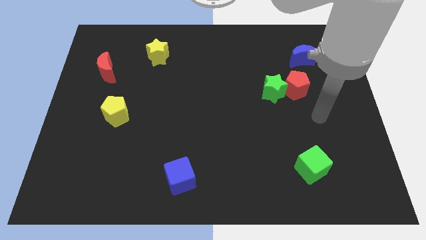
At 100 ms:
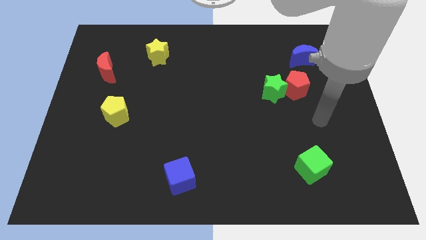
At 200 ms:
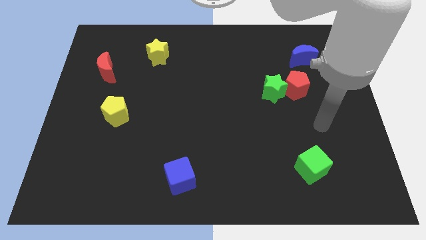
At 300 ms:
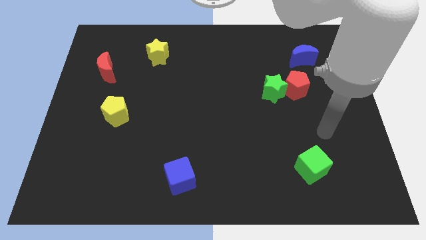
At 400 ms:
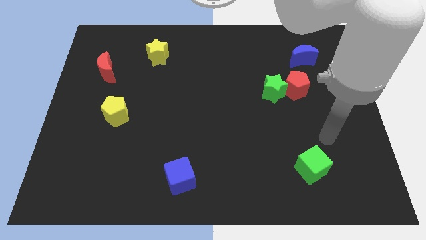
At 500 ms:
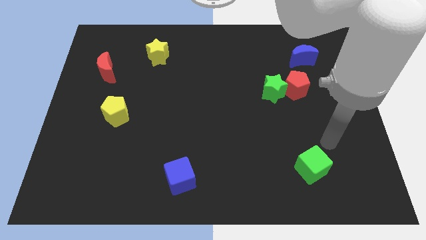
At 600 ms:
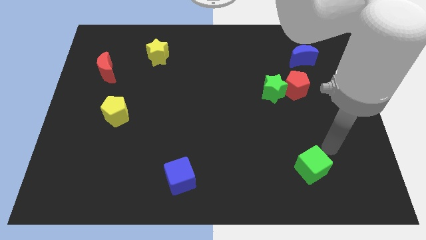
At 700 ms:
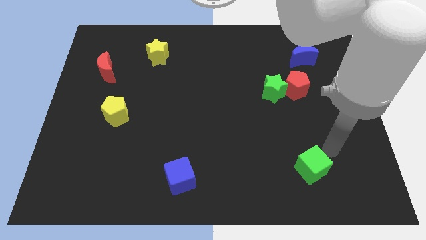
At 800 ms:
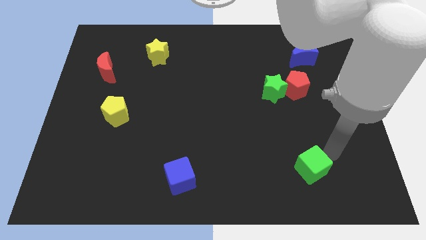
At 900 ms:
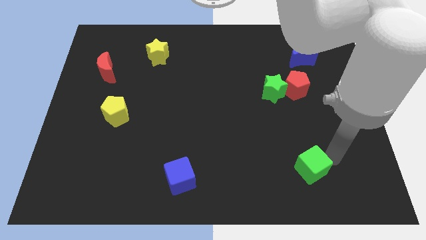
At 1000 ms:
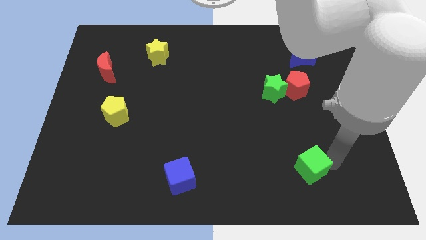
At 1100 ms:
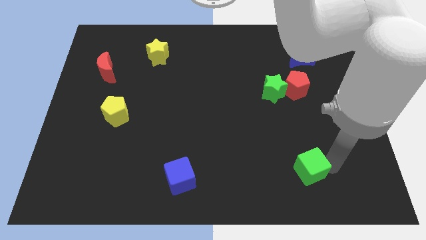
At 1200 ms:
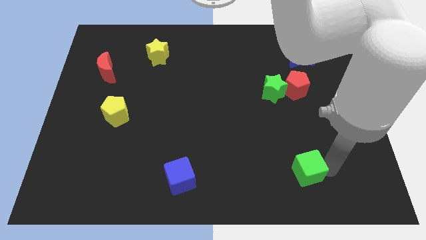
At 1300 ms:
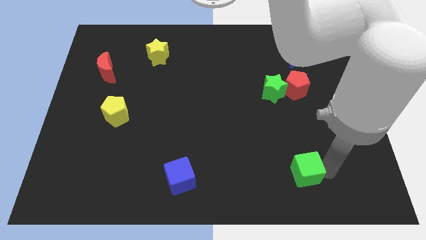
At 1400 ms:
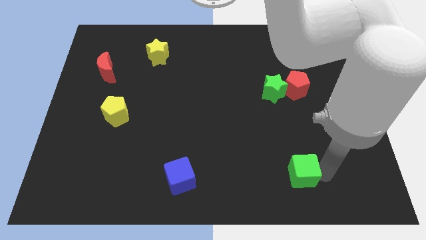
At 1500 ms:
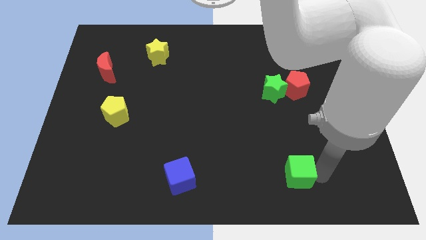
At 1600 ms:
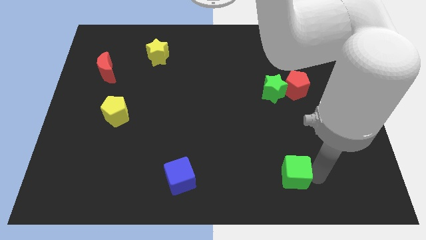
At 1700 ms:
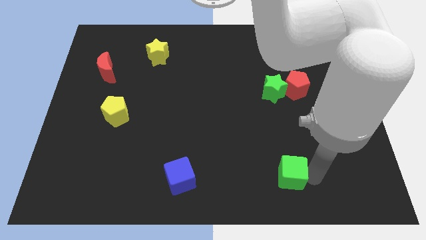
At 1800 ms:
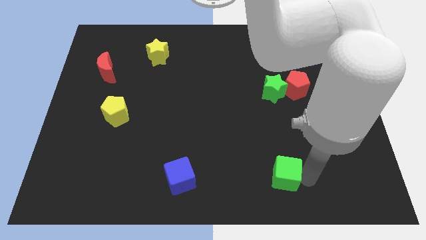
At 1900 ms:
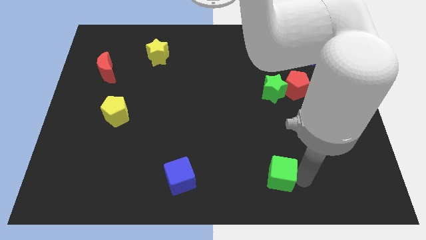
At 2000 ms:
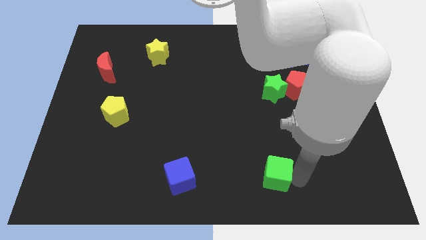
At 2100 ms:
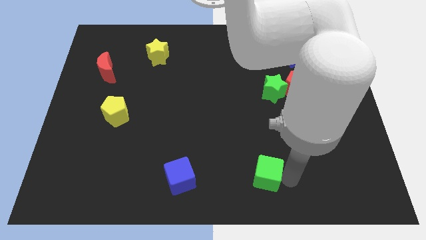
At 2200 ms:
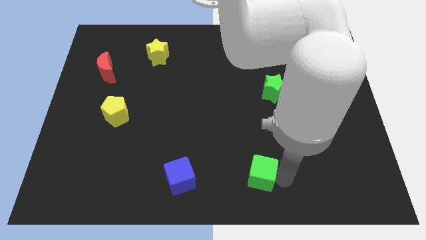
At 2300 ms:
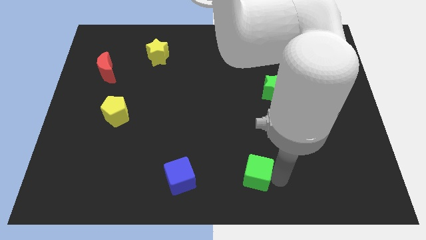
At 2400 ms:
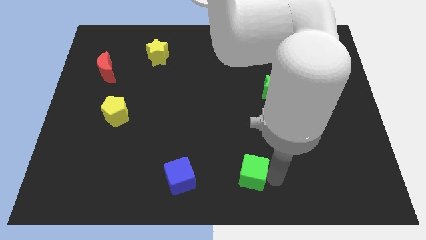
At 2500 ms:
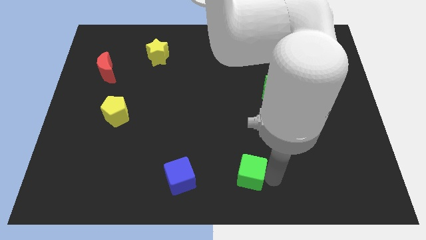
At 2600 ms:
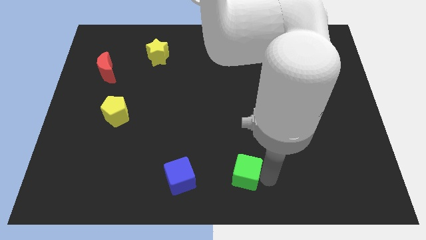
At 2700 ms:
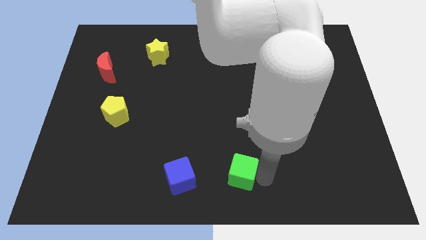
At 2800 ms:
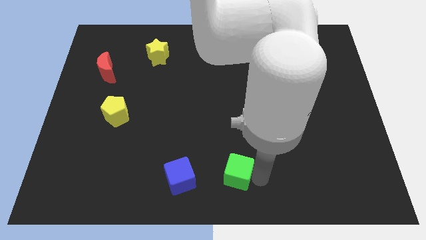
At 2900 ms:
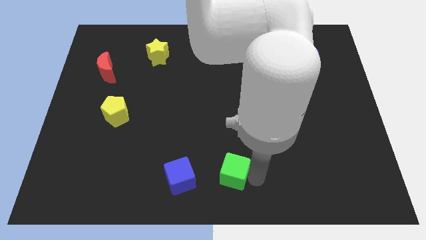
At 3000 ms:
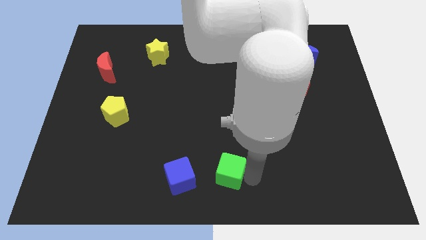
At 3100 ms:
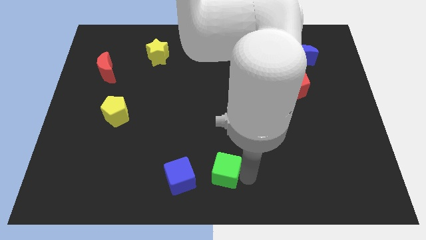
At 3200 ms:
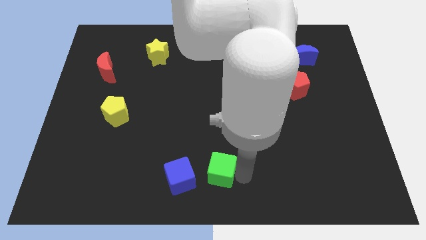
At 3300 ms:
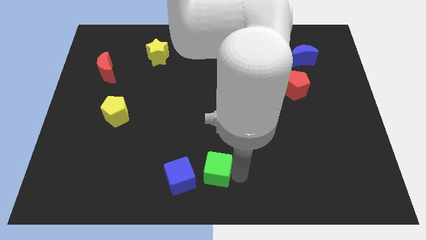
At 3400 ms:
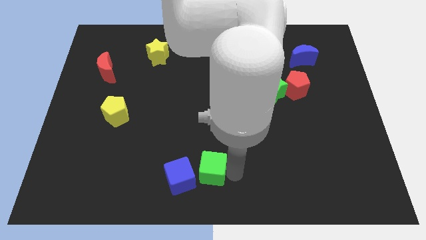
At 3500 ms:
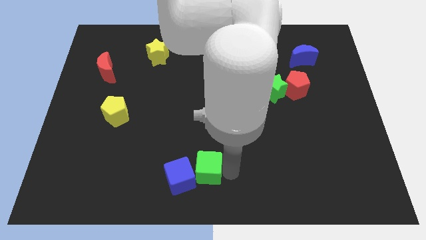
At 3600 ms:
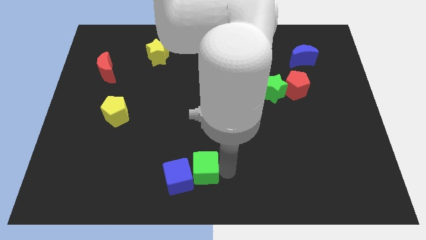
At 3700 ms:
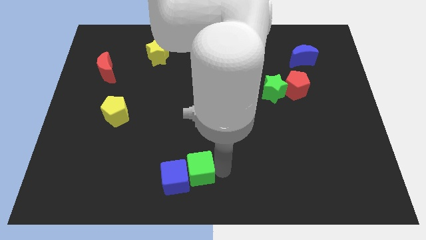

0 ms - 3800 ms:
slide the green cube to the blue cube

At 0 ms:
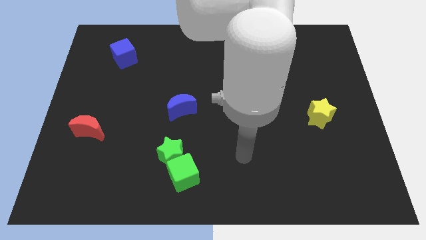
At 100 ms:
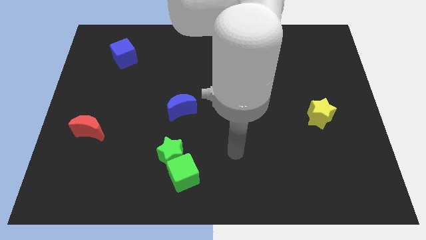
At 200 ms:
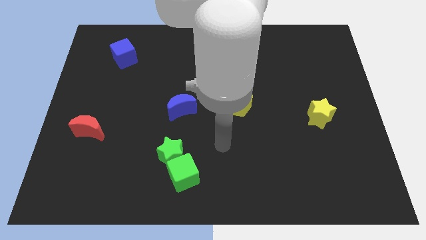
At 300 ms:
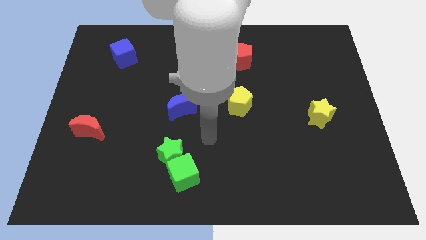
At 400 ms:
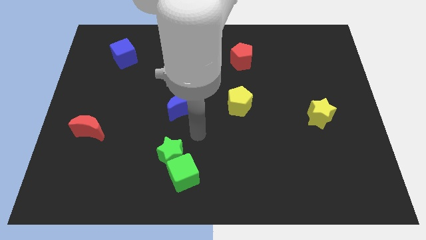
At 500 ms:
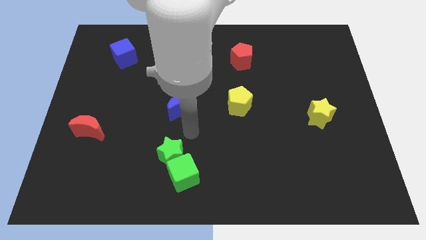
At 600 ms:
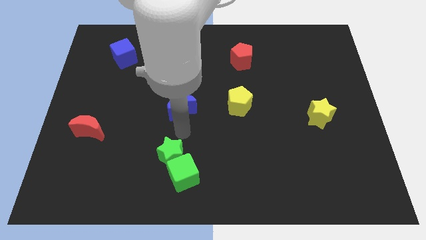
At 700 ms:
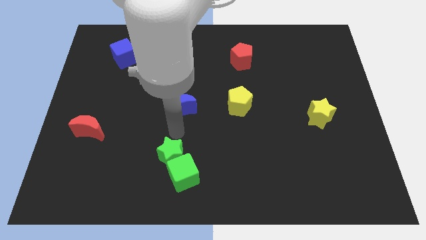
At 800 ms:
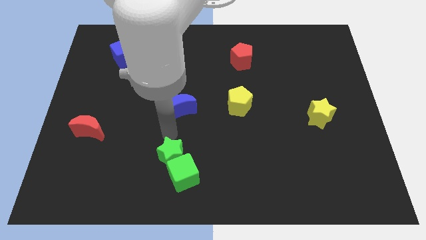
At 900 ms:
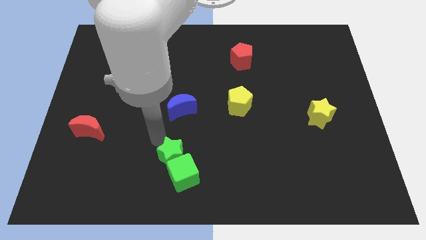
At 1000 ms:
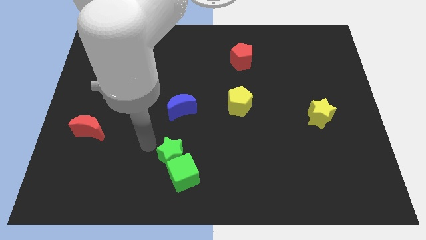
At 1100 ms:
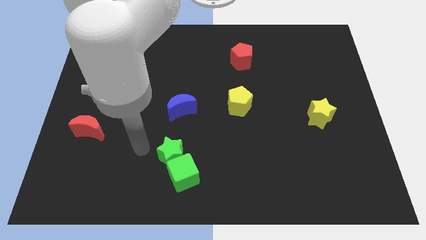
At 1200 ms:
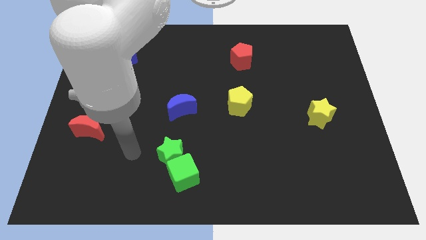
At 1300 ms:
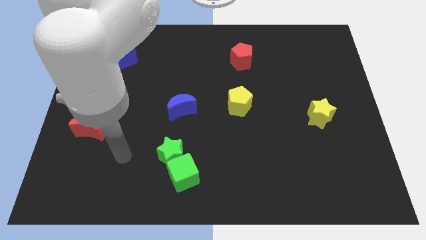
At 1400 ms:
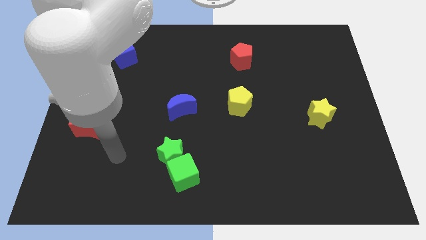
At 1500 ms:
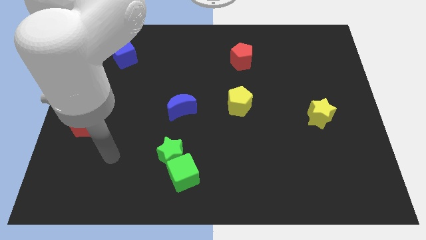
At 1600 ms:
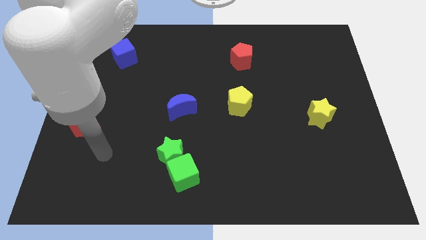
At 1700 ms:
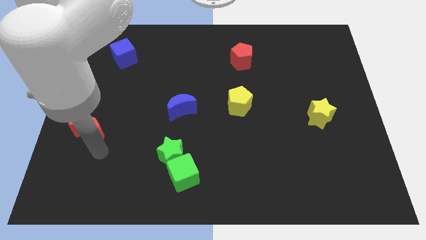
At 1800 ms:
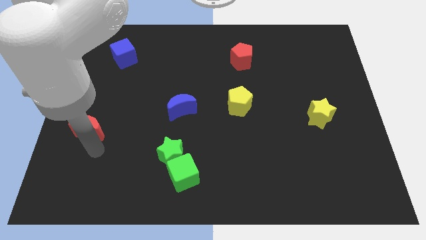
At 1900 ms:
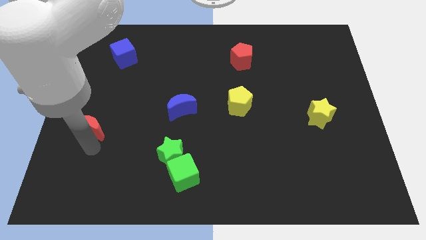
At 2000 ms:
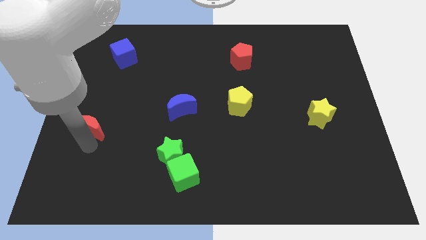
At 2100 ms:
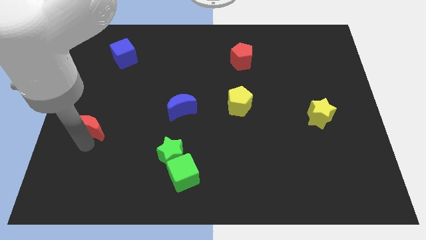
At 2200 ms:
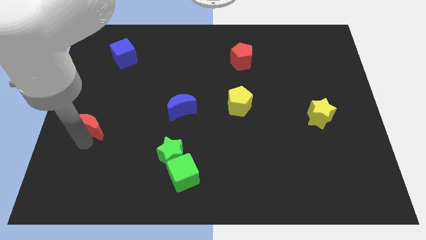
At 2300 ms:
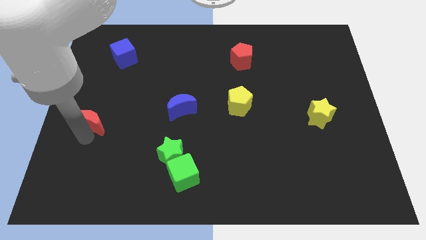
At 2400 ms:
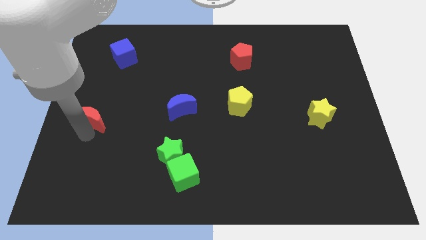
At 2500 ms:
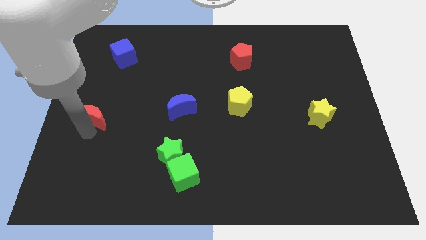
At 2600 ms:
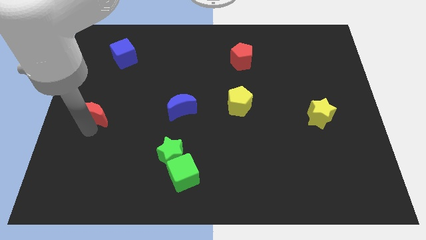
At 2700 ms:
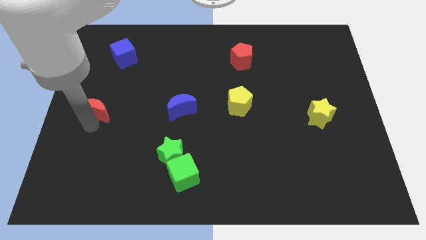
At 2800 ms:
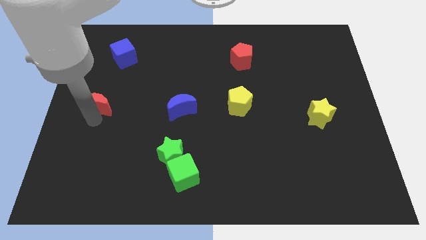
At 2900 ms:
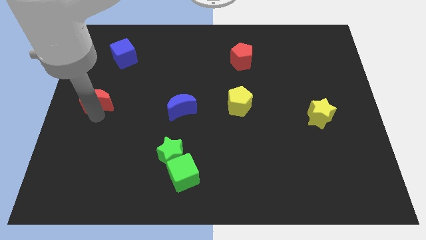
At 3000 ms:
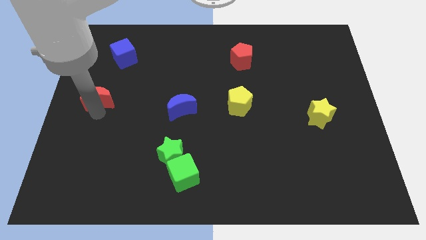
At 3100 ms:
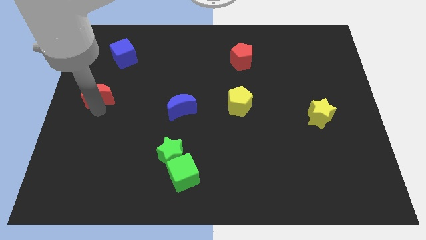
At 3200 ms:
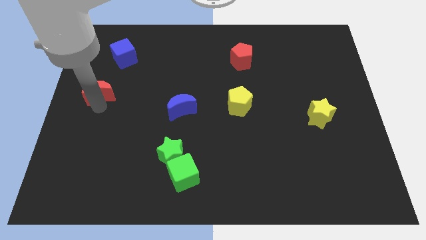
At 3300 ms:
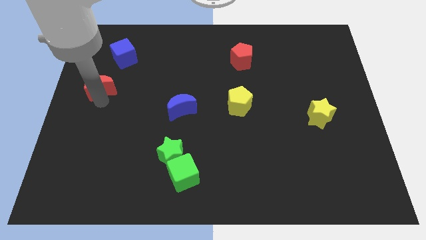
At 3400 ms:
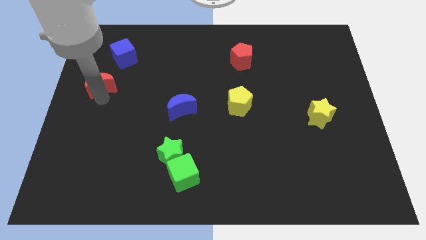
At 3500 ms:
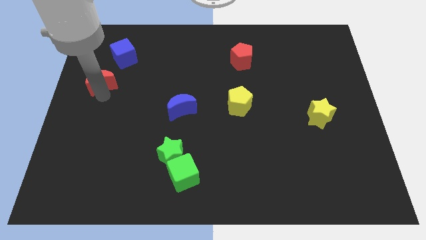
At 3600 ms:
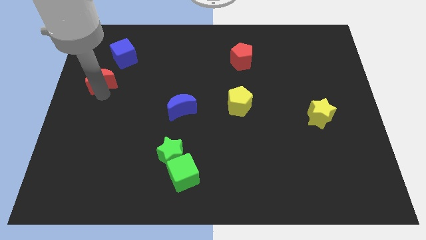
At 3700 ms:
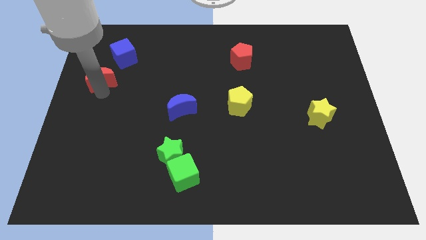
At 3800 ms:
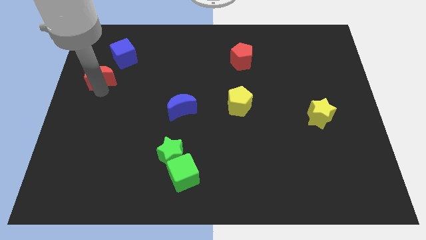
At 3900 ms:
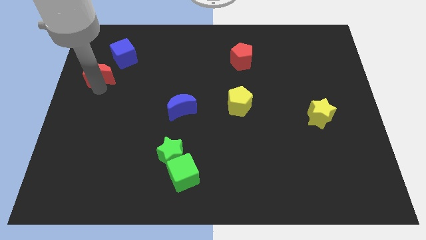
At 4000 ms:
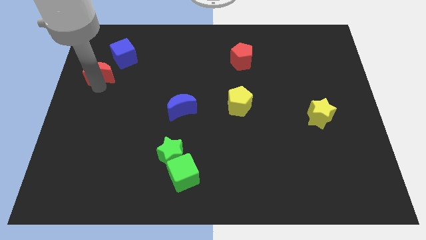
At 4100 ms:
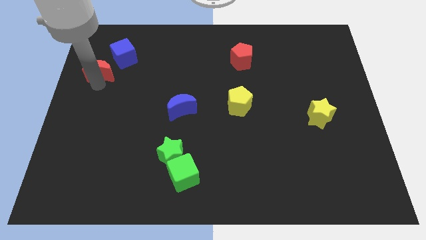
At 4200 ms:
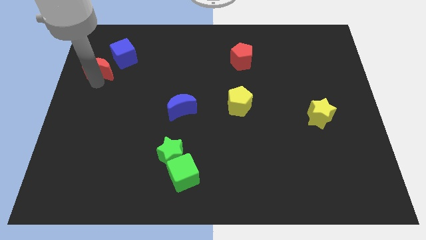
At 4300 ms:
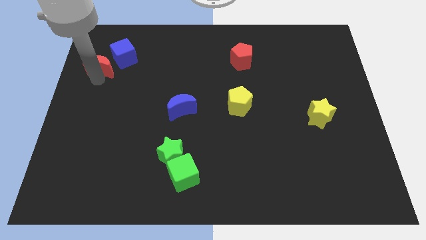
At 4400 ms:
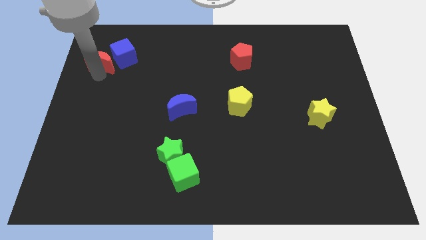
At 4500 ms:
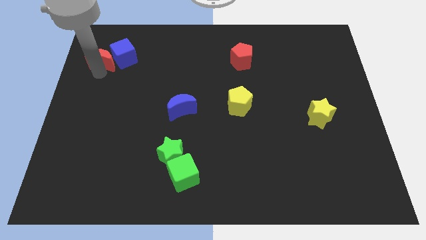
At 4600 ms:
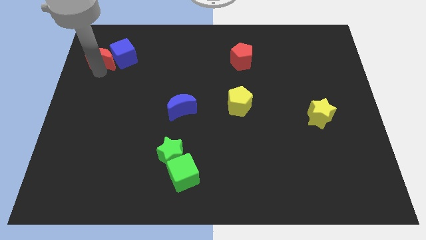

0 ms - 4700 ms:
push the red moon to the blue cube
